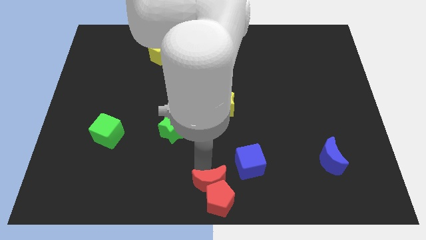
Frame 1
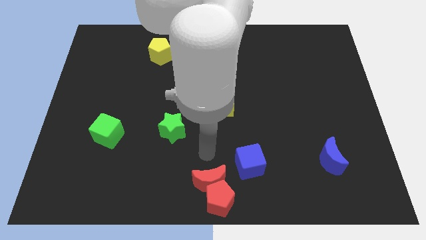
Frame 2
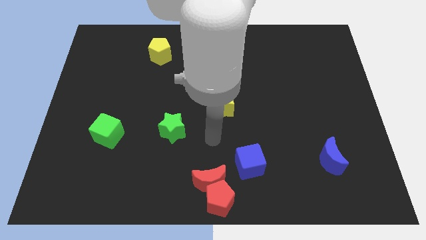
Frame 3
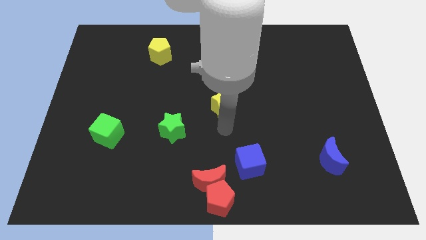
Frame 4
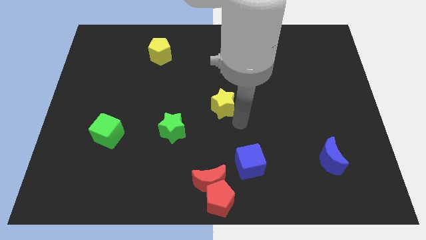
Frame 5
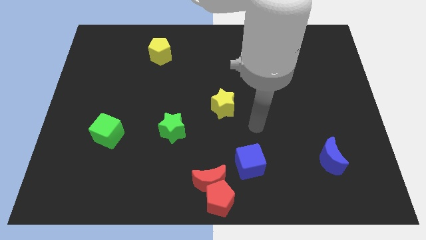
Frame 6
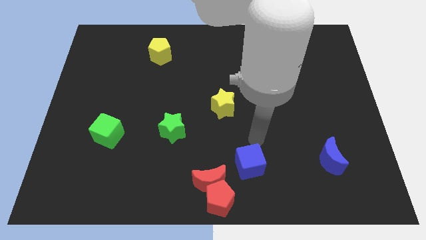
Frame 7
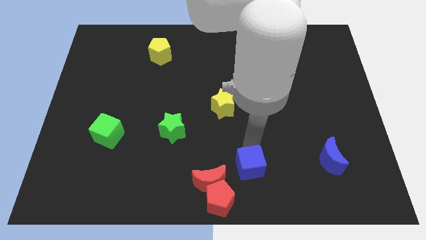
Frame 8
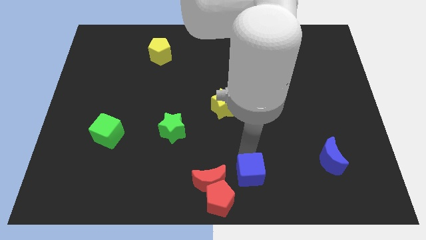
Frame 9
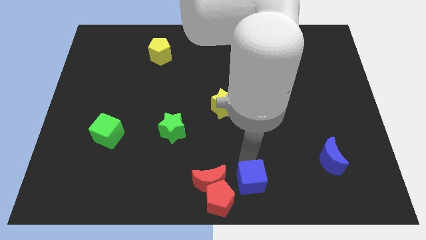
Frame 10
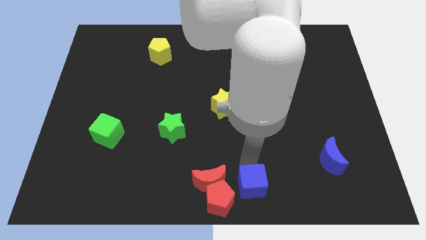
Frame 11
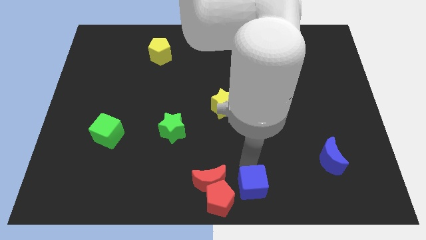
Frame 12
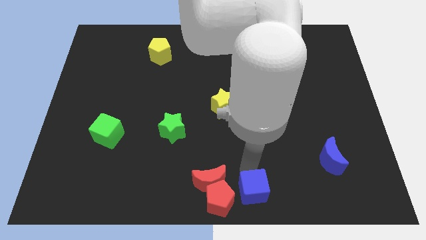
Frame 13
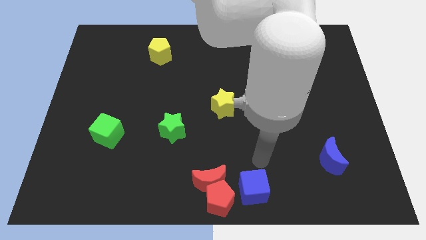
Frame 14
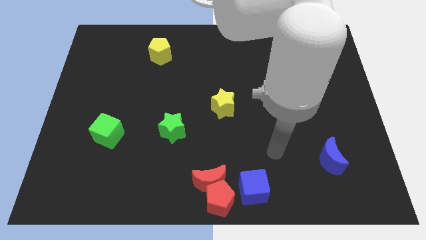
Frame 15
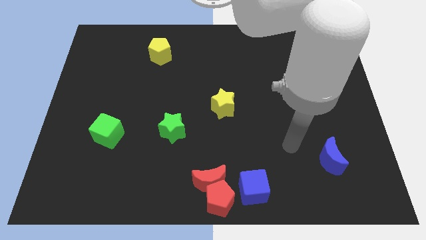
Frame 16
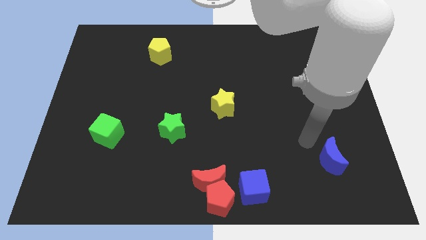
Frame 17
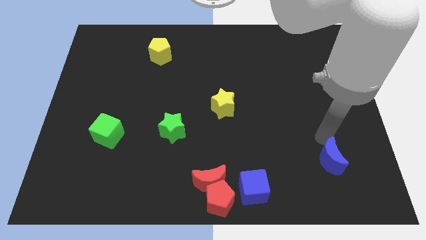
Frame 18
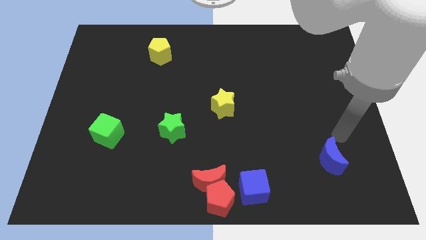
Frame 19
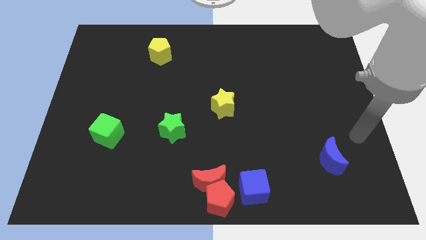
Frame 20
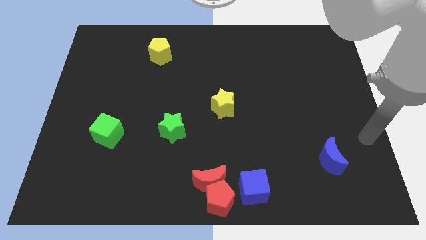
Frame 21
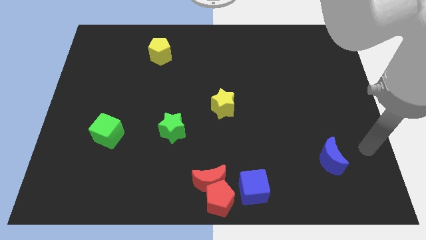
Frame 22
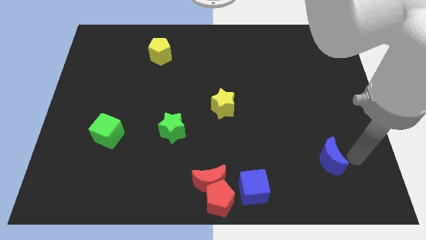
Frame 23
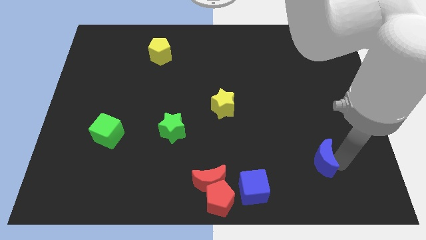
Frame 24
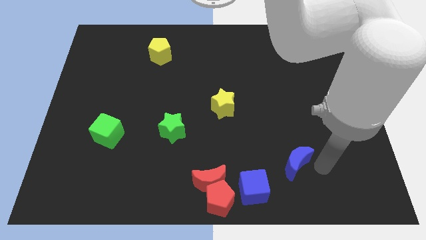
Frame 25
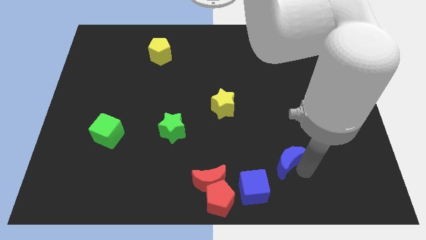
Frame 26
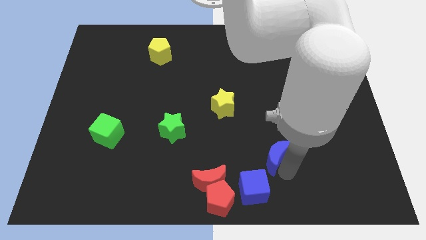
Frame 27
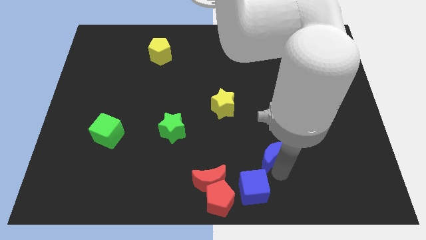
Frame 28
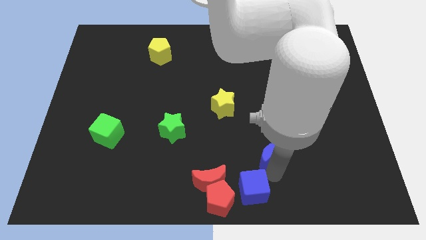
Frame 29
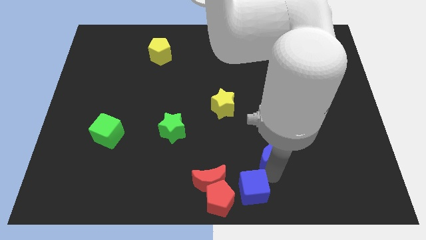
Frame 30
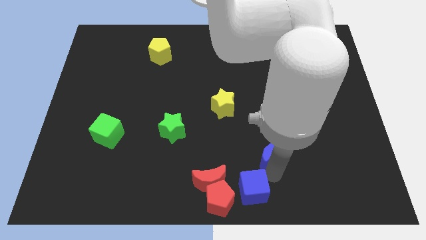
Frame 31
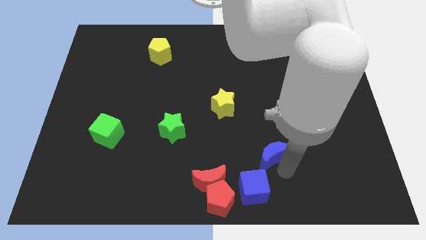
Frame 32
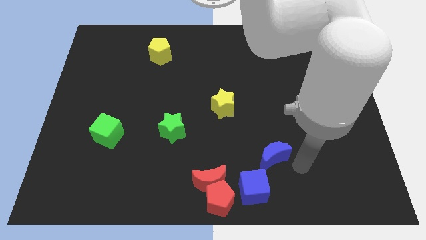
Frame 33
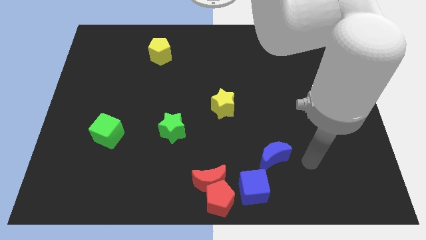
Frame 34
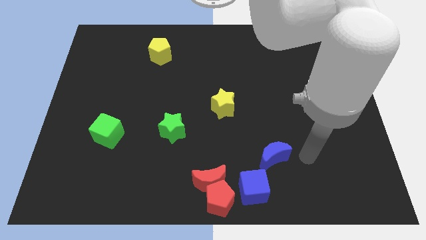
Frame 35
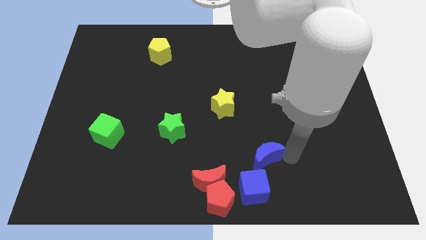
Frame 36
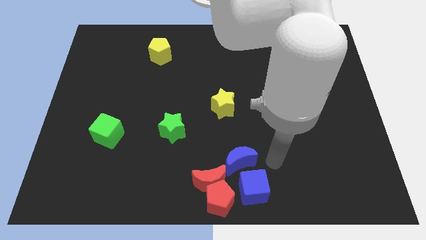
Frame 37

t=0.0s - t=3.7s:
move the blue cube and the blue moon vertical to each other

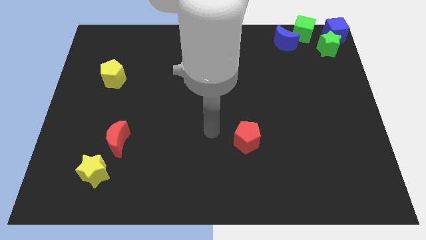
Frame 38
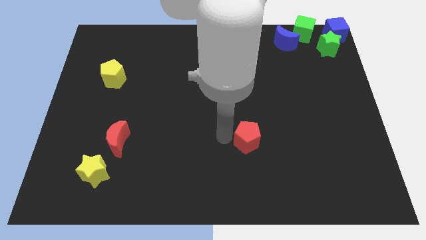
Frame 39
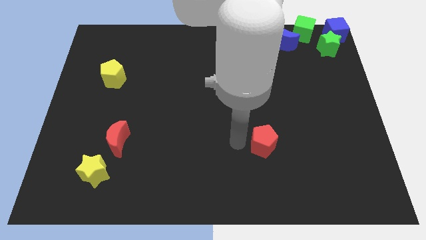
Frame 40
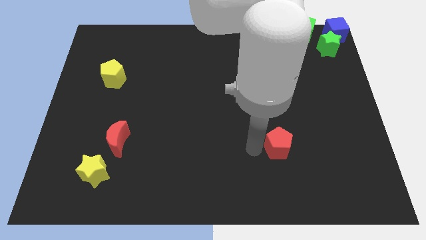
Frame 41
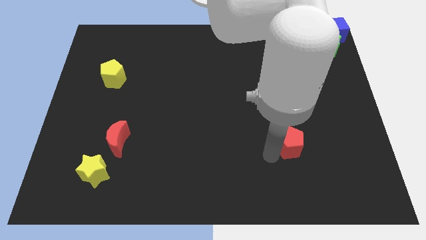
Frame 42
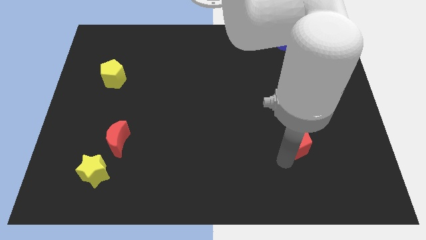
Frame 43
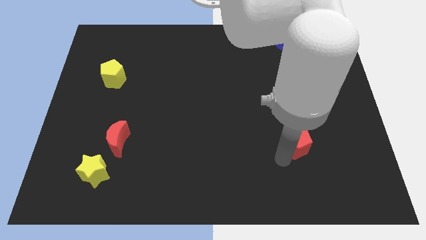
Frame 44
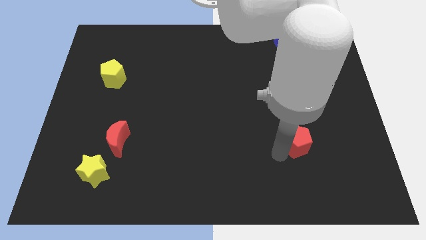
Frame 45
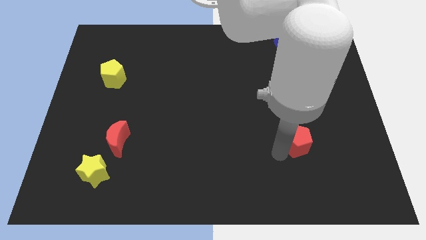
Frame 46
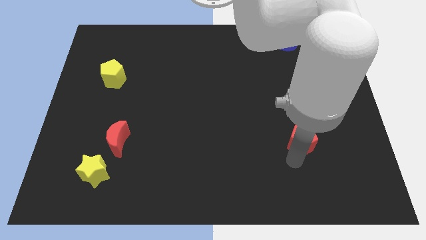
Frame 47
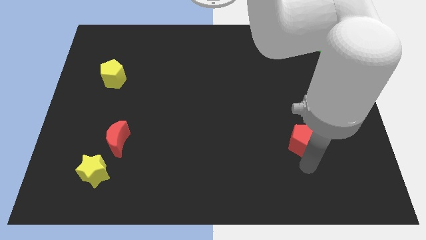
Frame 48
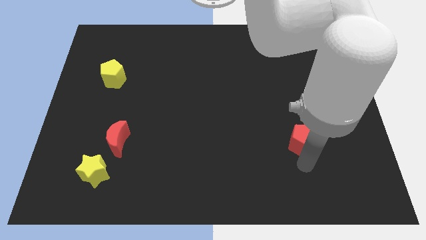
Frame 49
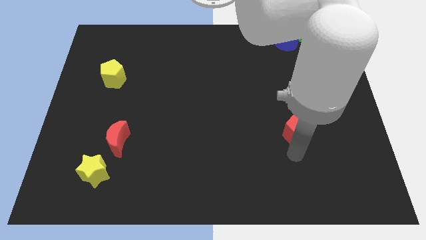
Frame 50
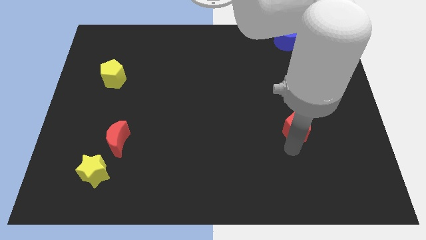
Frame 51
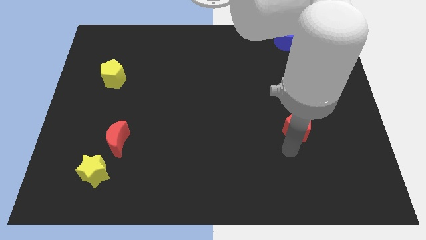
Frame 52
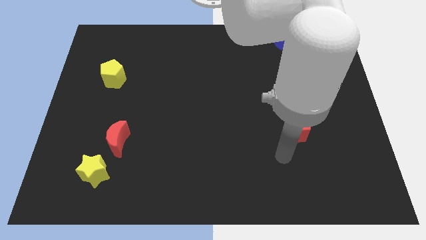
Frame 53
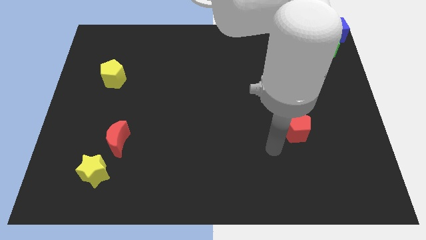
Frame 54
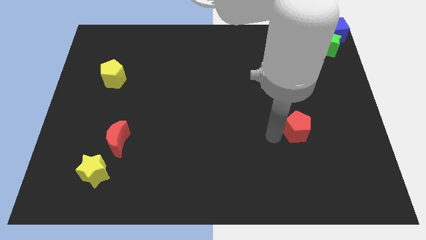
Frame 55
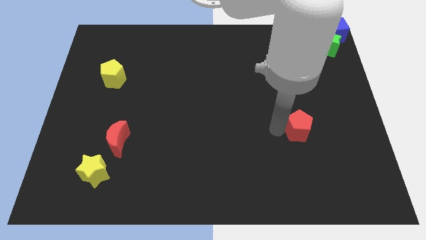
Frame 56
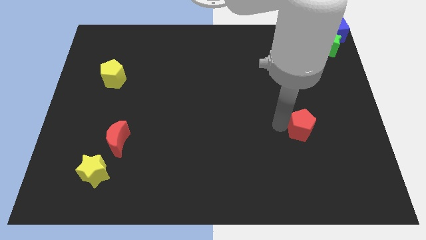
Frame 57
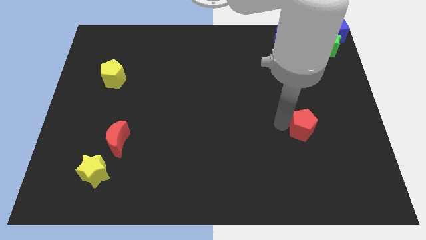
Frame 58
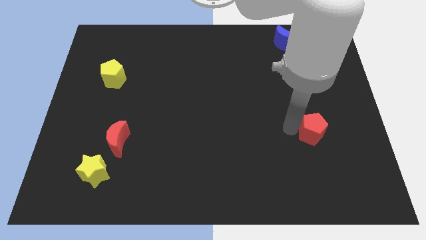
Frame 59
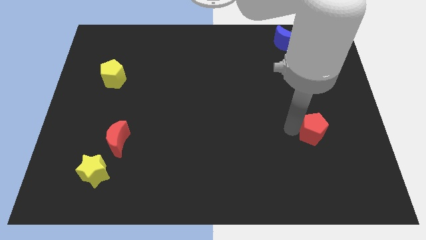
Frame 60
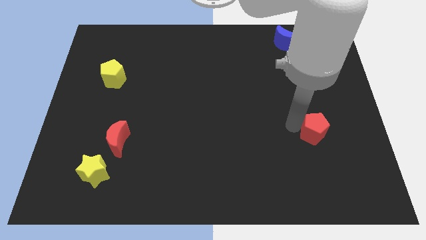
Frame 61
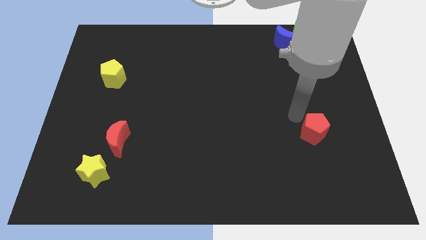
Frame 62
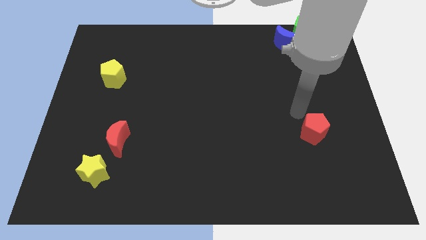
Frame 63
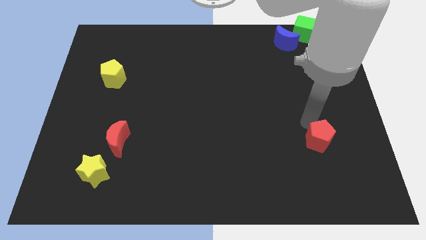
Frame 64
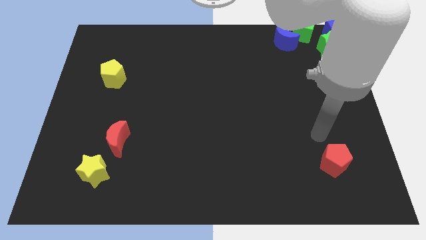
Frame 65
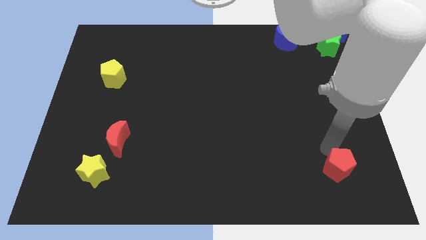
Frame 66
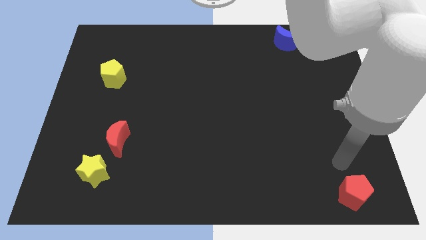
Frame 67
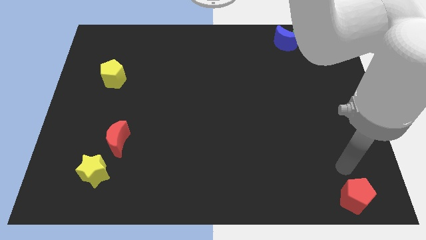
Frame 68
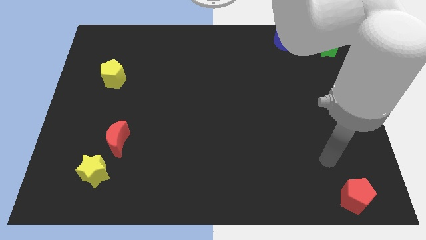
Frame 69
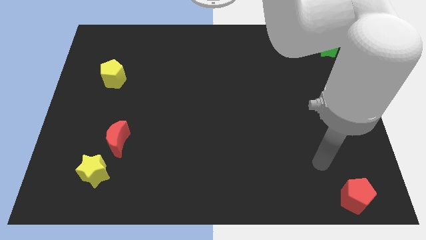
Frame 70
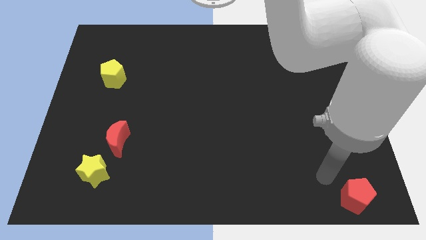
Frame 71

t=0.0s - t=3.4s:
move the red pentagon to the bottom right

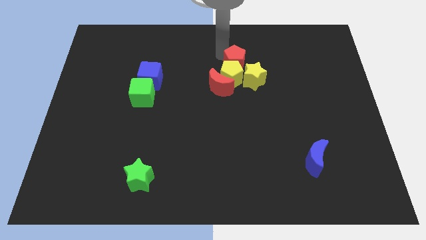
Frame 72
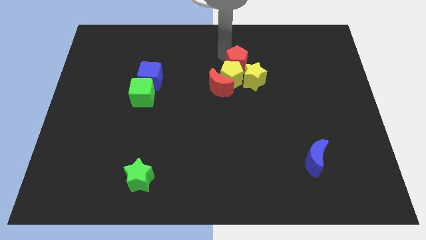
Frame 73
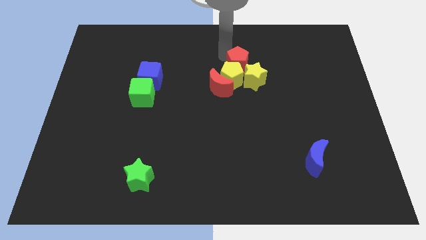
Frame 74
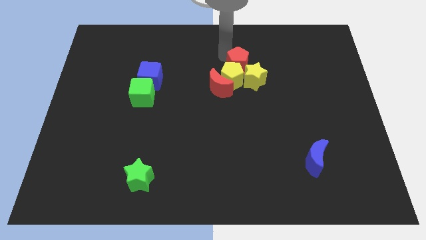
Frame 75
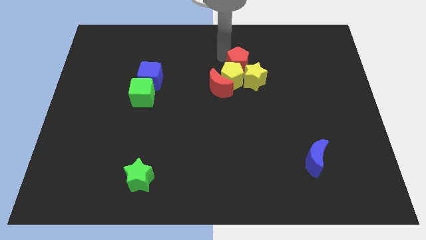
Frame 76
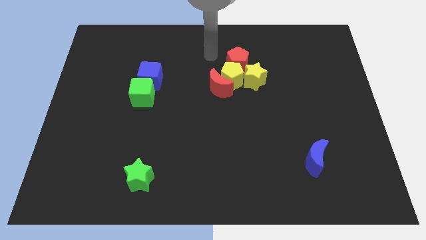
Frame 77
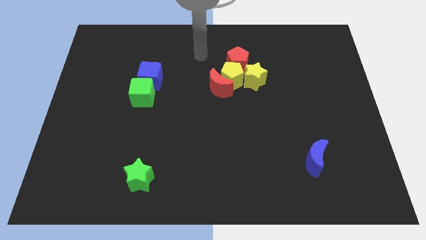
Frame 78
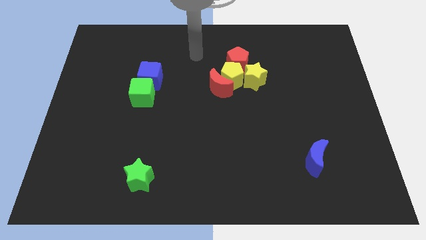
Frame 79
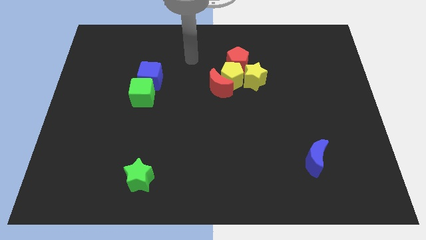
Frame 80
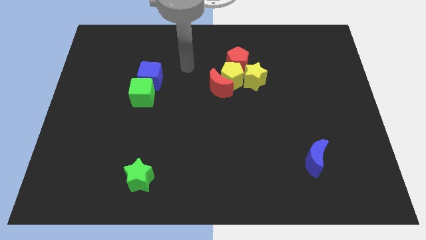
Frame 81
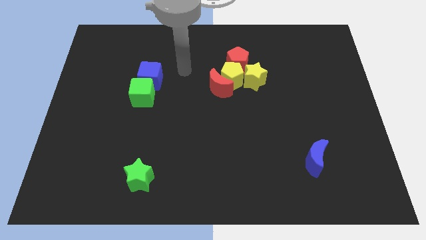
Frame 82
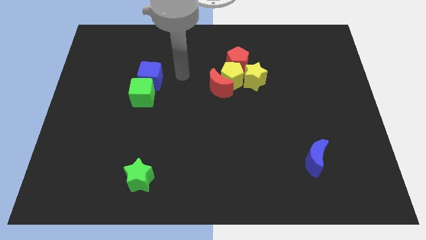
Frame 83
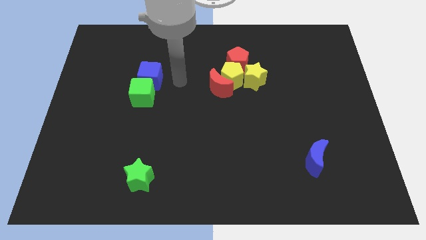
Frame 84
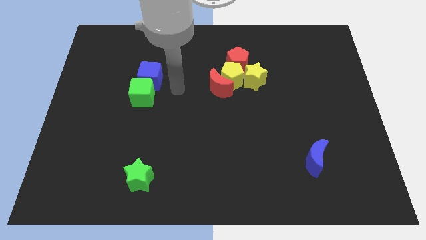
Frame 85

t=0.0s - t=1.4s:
move your arm away from the red pentagon

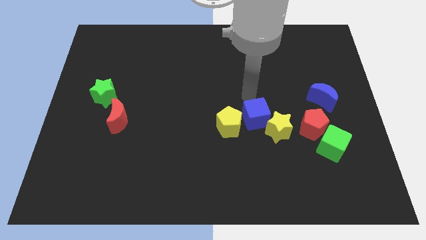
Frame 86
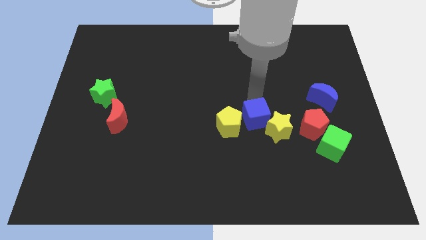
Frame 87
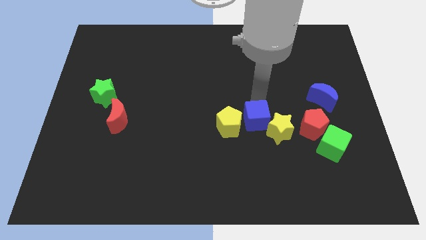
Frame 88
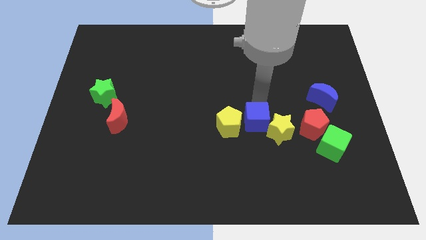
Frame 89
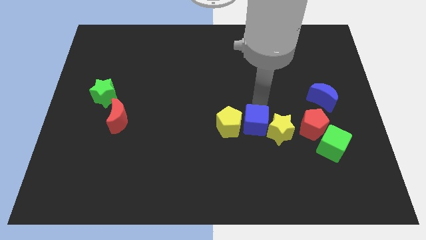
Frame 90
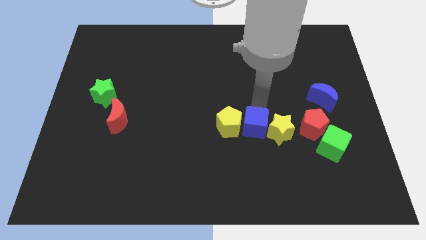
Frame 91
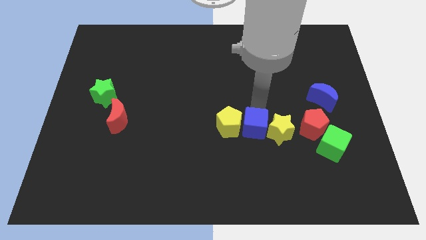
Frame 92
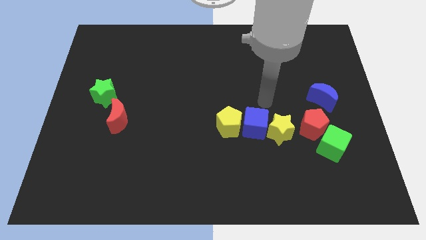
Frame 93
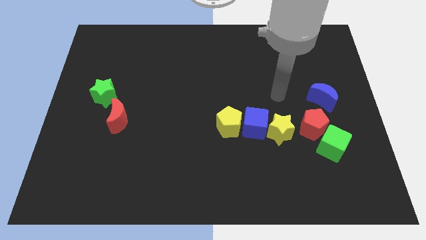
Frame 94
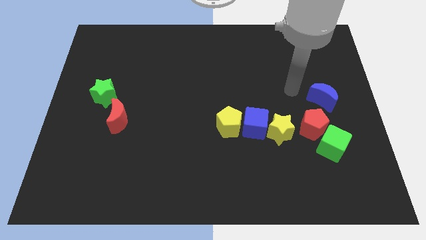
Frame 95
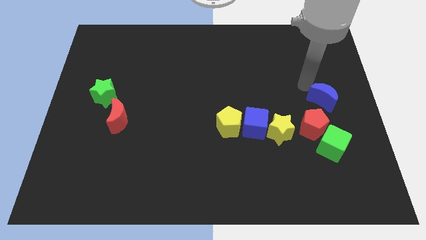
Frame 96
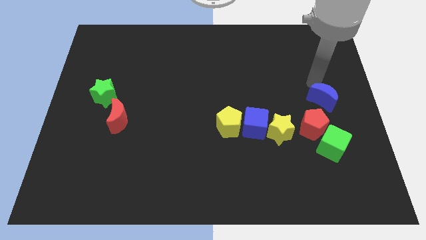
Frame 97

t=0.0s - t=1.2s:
push the blue cube slightly down
